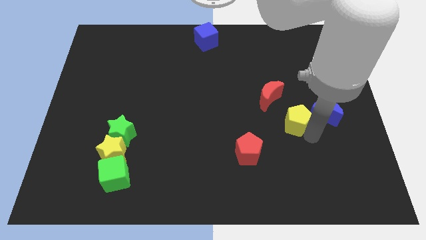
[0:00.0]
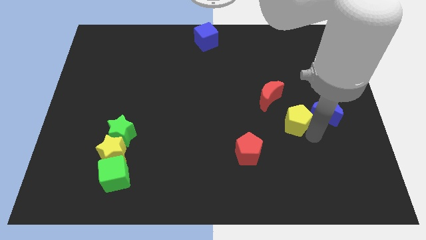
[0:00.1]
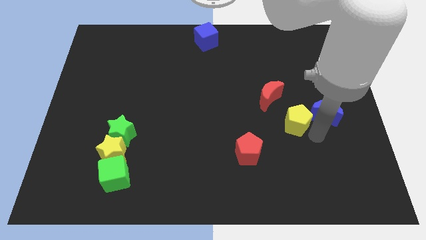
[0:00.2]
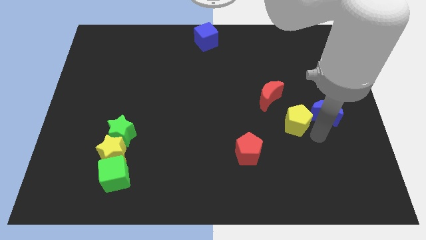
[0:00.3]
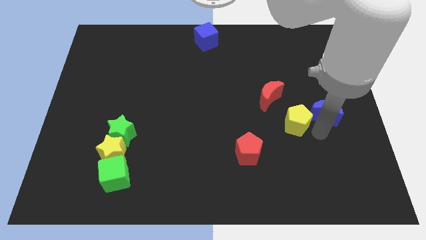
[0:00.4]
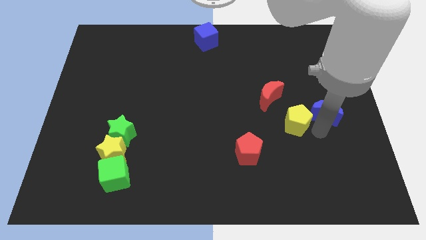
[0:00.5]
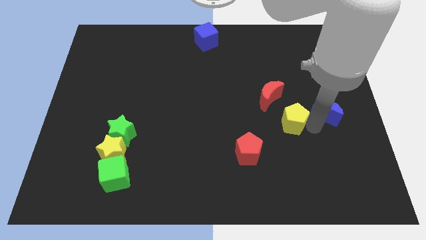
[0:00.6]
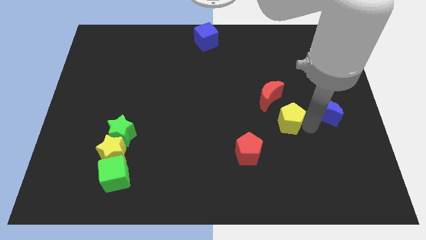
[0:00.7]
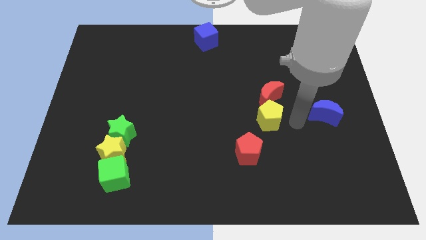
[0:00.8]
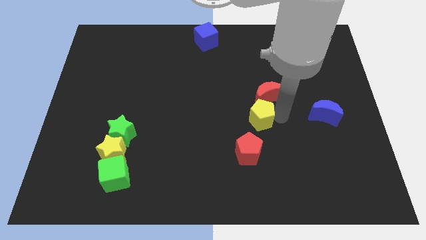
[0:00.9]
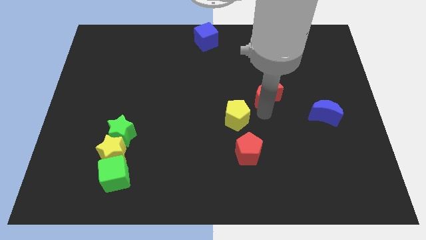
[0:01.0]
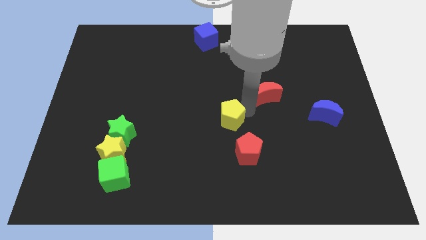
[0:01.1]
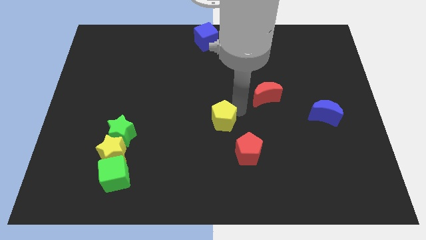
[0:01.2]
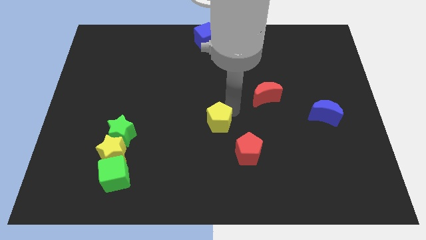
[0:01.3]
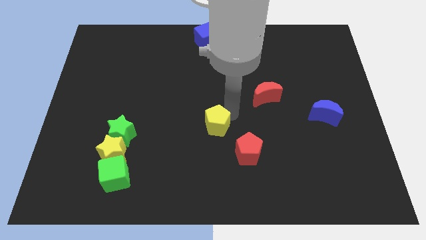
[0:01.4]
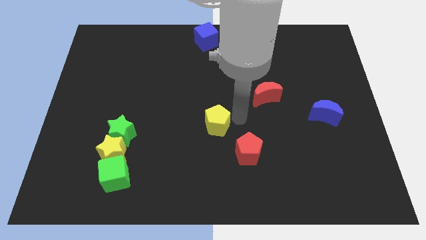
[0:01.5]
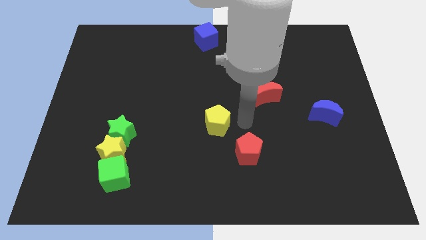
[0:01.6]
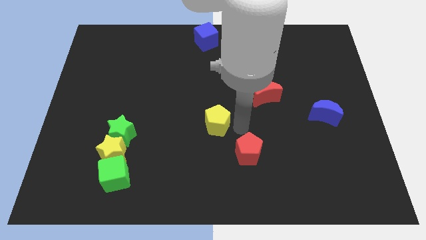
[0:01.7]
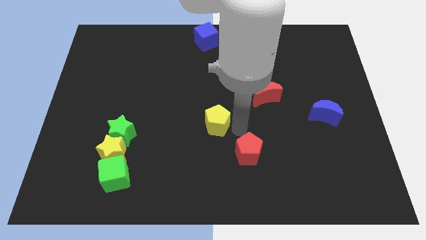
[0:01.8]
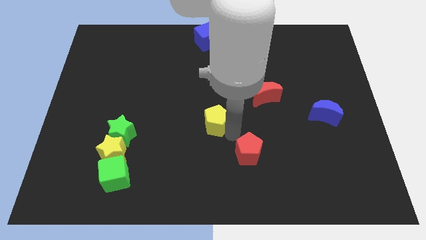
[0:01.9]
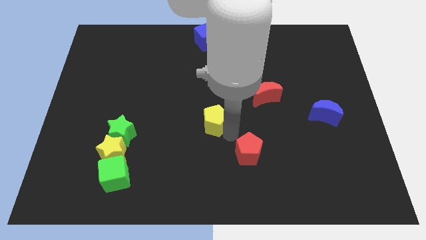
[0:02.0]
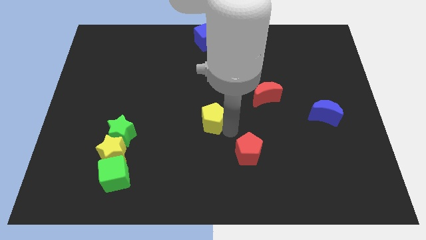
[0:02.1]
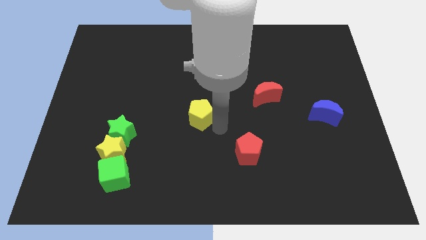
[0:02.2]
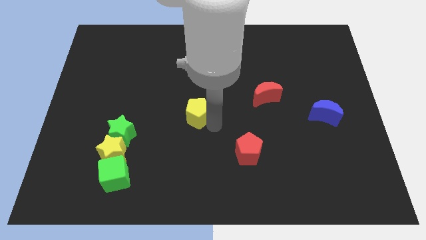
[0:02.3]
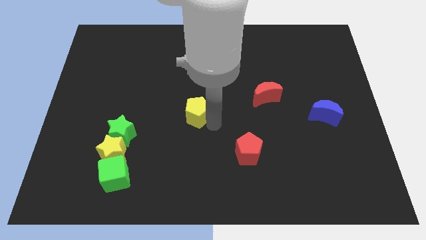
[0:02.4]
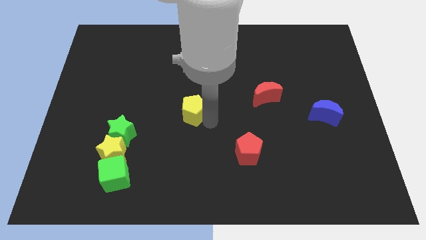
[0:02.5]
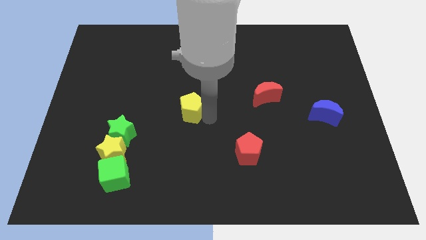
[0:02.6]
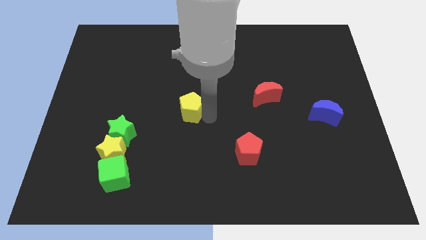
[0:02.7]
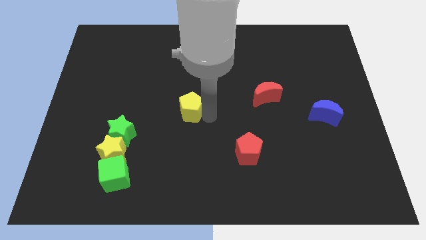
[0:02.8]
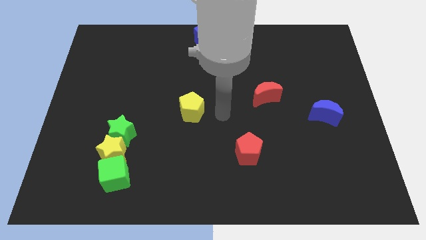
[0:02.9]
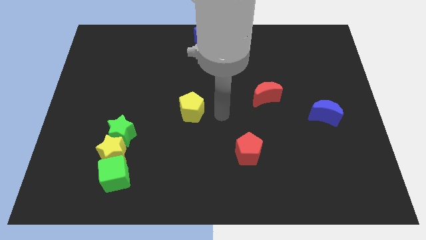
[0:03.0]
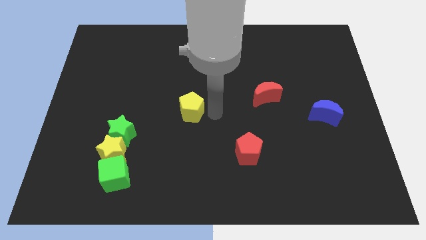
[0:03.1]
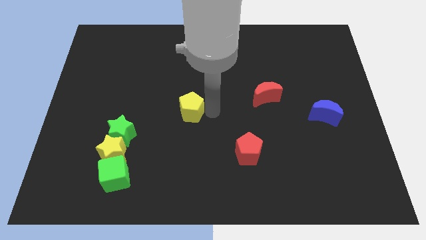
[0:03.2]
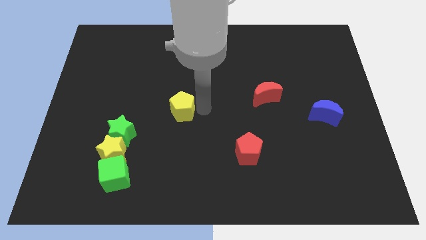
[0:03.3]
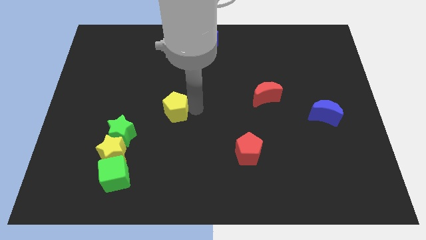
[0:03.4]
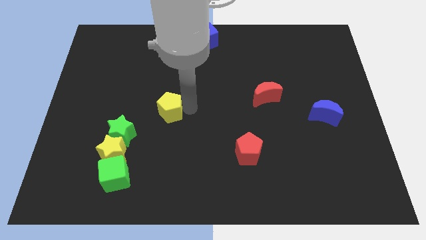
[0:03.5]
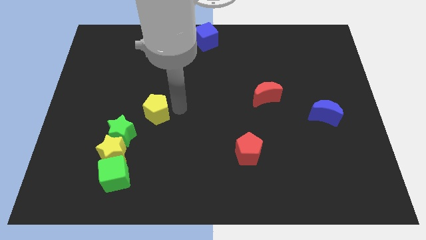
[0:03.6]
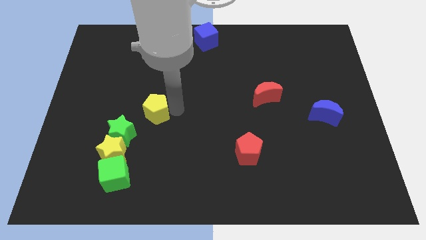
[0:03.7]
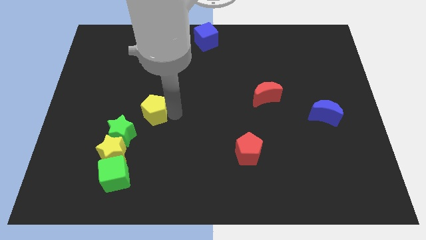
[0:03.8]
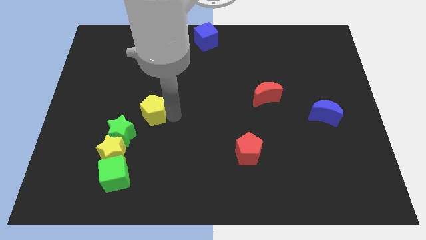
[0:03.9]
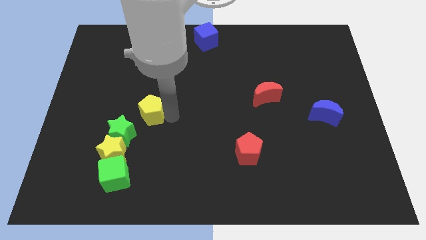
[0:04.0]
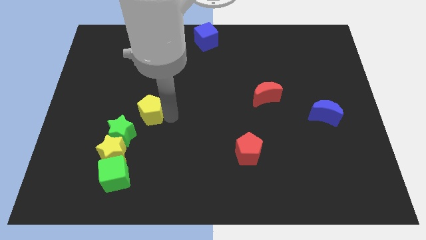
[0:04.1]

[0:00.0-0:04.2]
push the yellow pentagon to the left side of the board

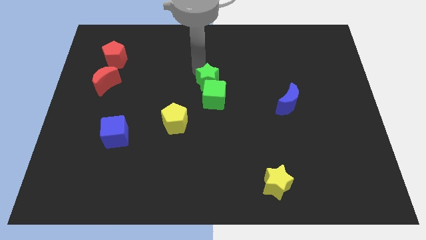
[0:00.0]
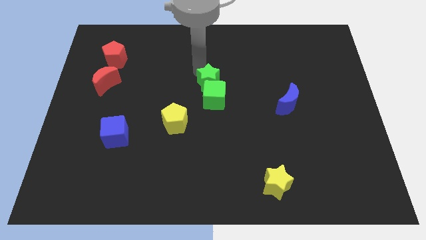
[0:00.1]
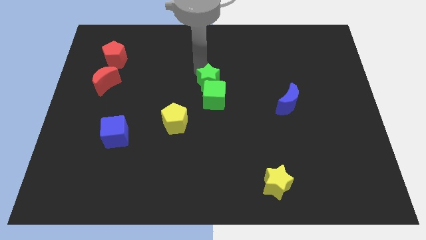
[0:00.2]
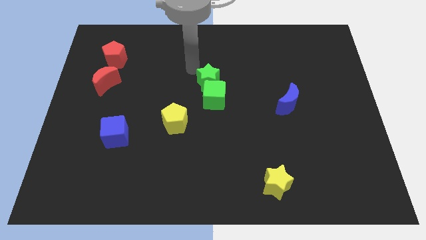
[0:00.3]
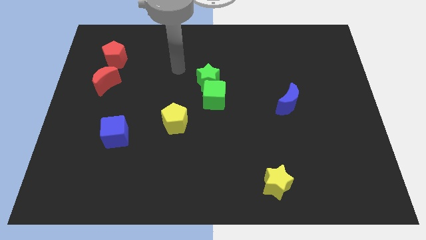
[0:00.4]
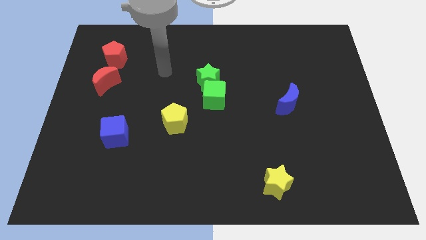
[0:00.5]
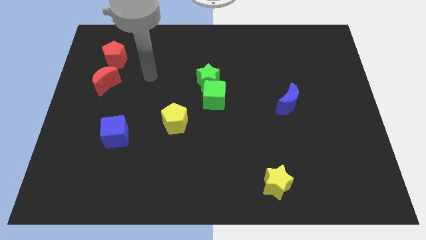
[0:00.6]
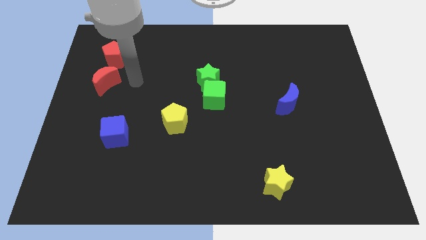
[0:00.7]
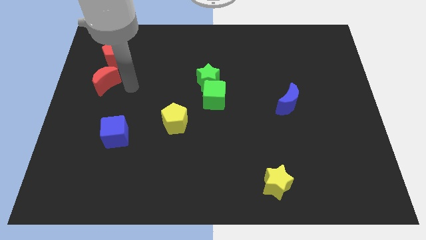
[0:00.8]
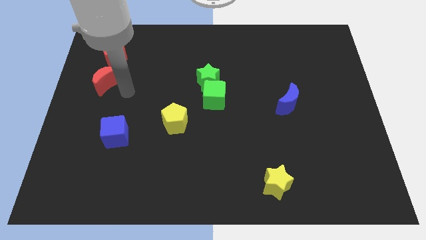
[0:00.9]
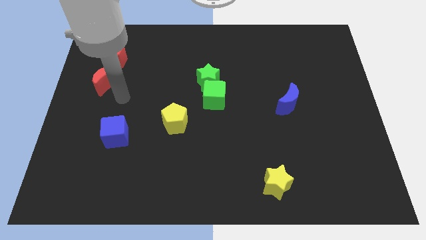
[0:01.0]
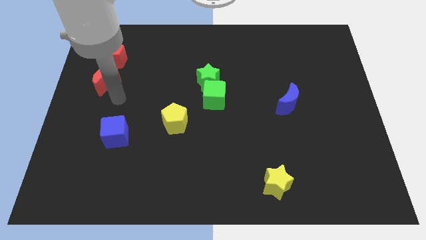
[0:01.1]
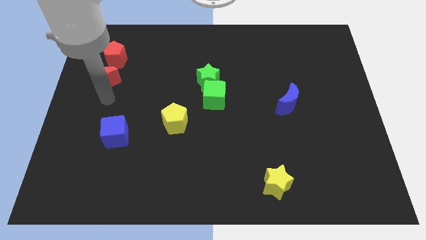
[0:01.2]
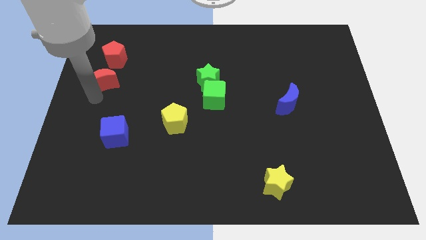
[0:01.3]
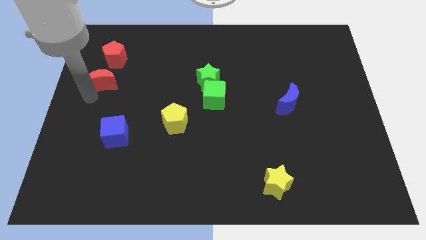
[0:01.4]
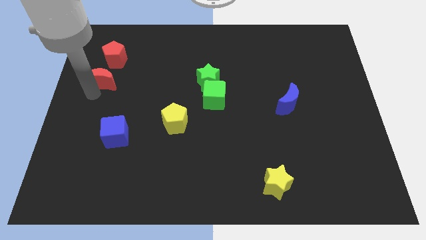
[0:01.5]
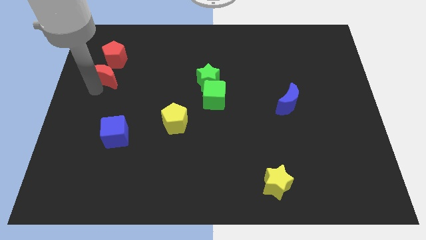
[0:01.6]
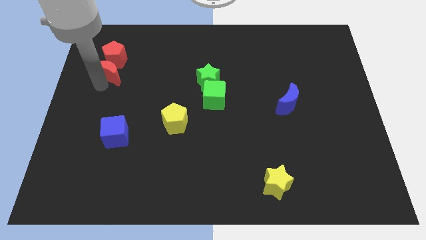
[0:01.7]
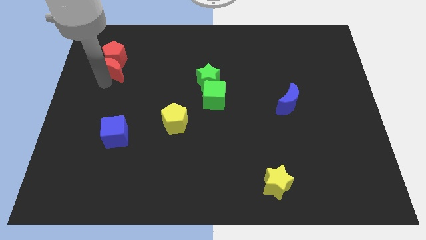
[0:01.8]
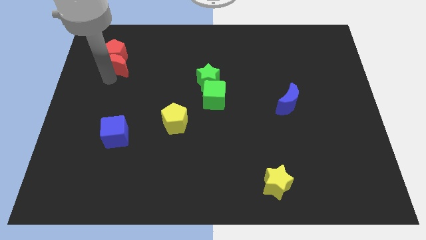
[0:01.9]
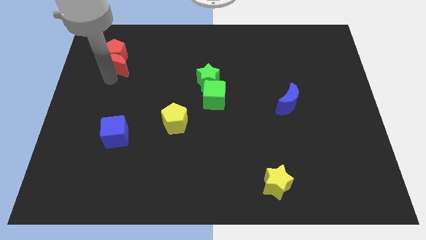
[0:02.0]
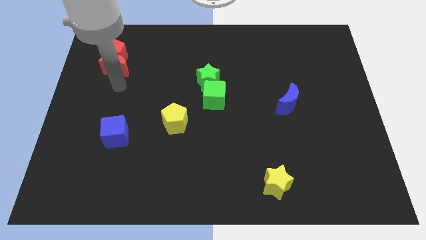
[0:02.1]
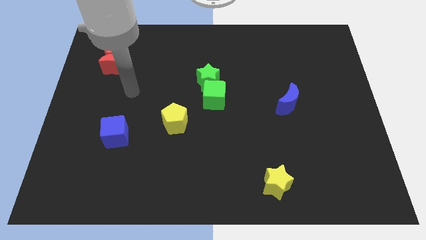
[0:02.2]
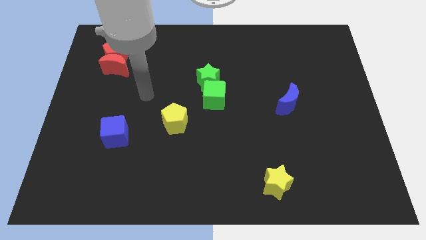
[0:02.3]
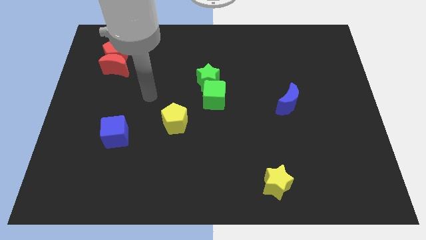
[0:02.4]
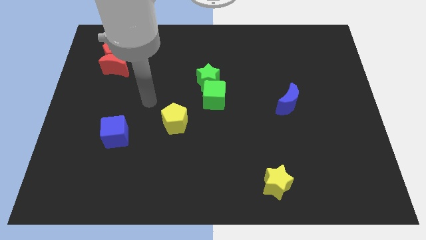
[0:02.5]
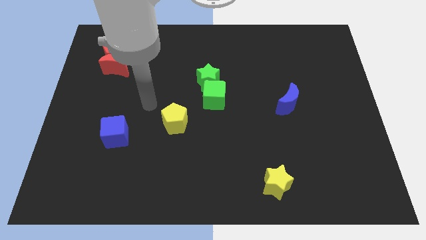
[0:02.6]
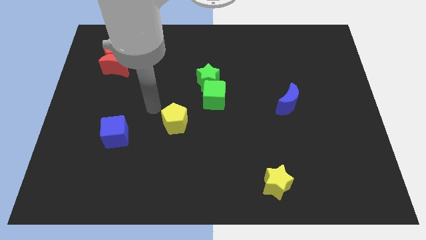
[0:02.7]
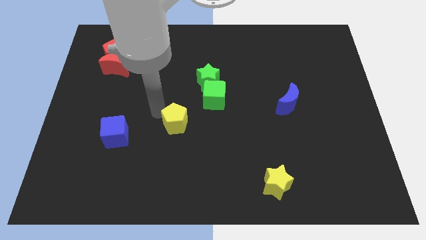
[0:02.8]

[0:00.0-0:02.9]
move red moon into the red pentagon

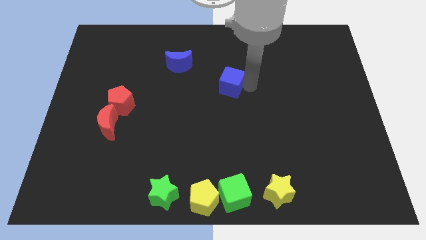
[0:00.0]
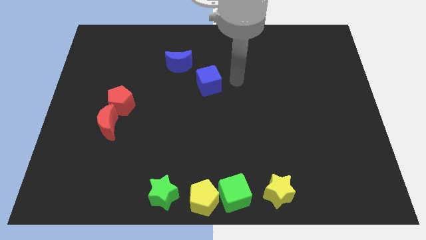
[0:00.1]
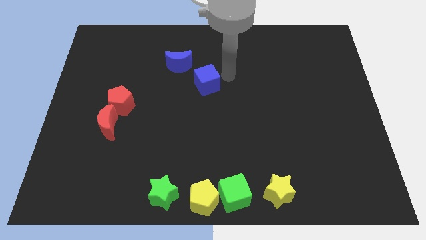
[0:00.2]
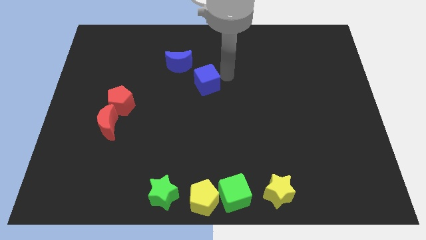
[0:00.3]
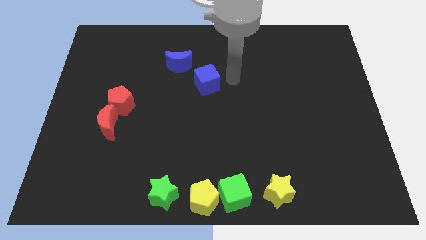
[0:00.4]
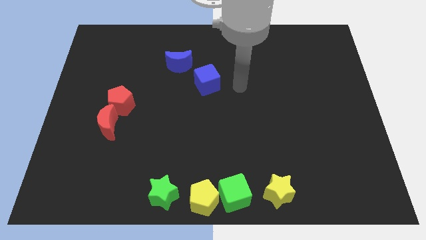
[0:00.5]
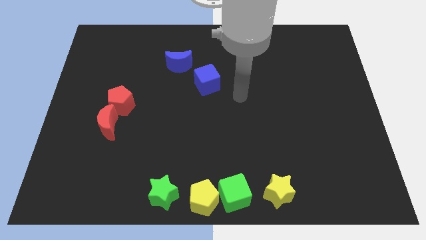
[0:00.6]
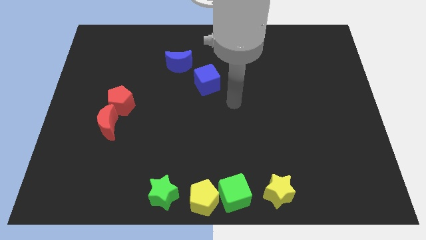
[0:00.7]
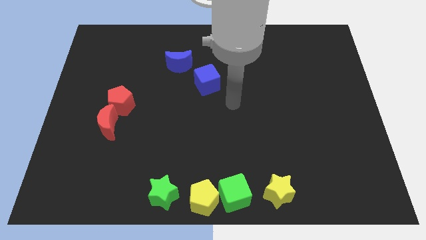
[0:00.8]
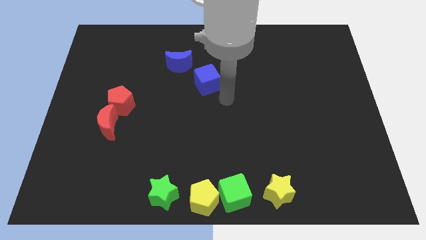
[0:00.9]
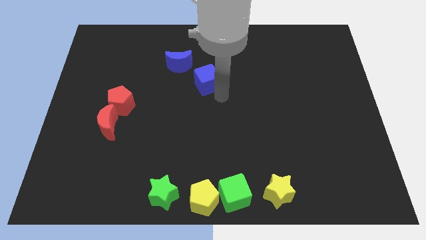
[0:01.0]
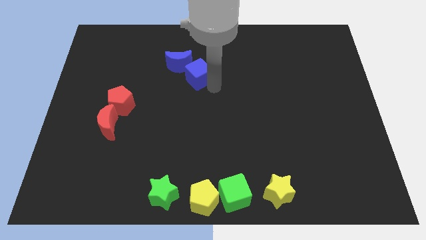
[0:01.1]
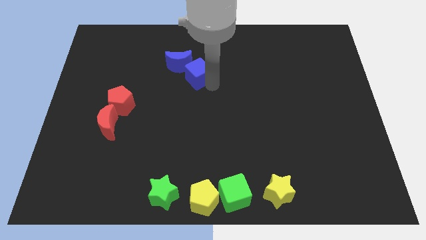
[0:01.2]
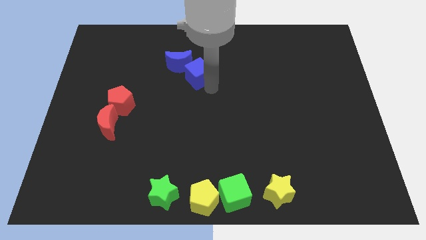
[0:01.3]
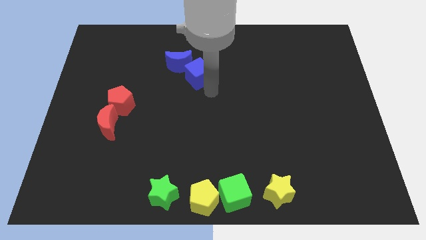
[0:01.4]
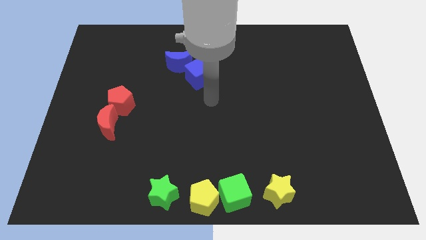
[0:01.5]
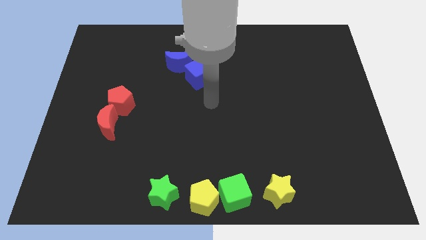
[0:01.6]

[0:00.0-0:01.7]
move the blue cube into the blue crescent

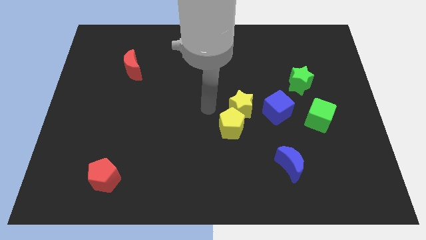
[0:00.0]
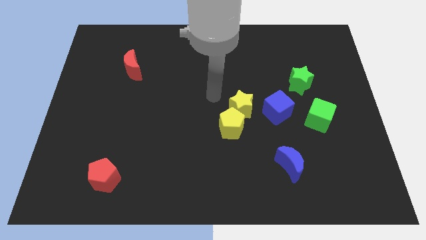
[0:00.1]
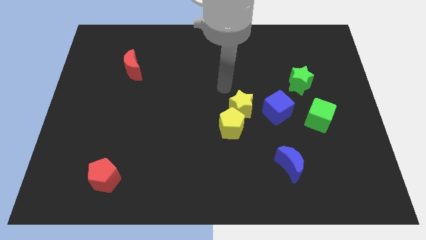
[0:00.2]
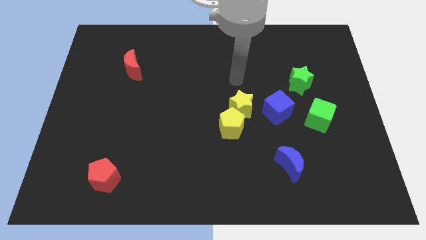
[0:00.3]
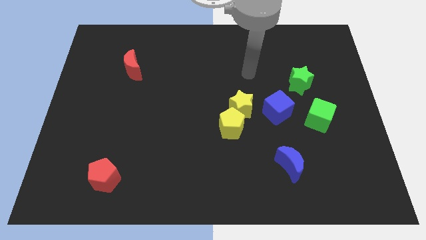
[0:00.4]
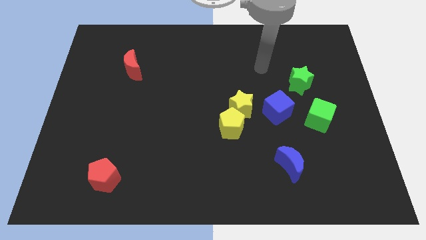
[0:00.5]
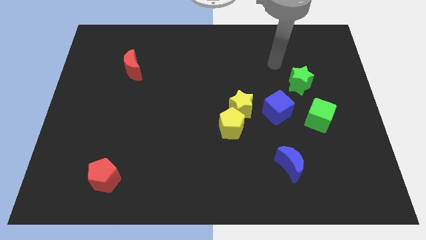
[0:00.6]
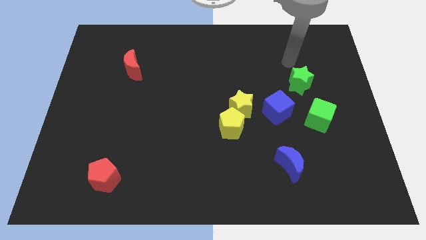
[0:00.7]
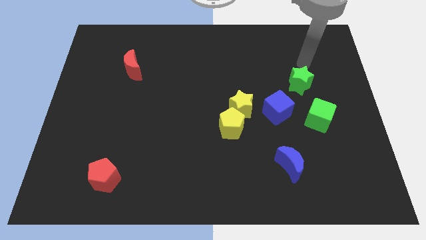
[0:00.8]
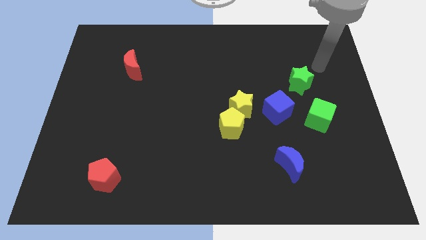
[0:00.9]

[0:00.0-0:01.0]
move your arm above the green star
